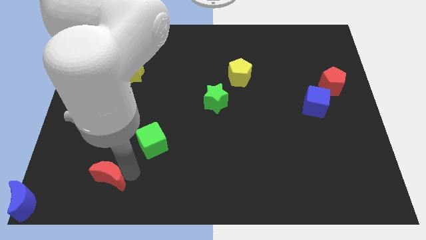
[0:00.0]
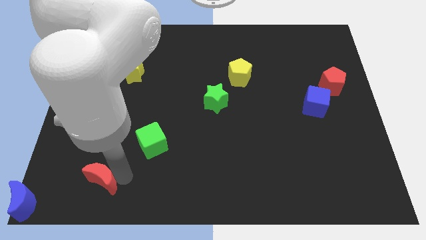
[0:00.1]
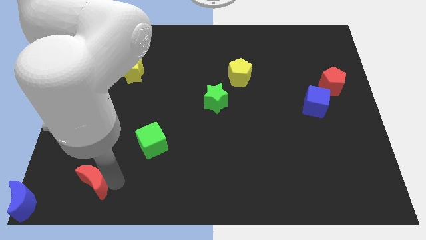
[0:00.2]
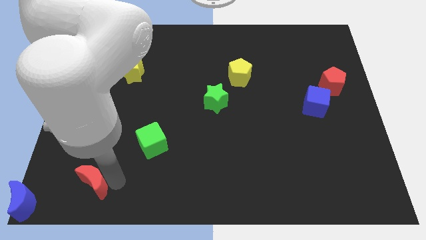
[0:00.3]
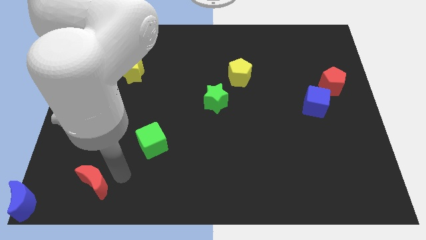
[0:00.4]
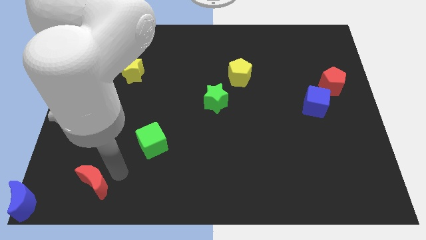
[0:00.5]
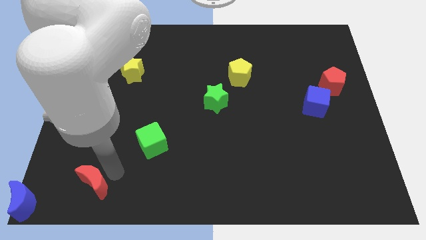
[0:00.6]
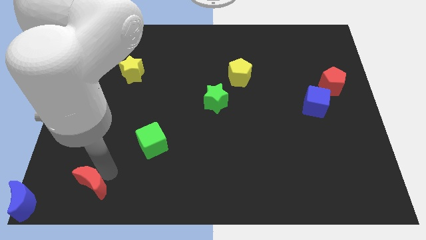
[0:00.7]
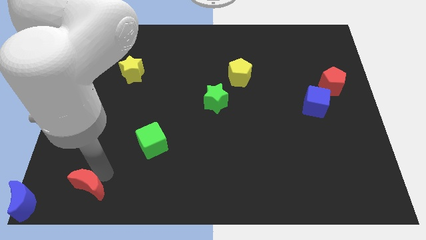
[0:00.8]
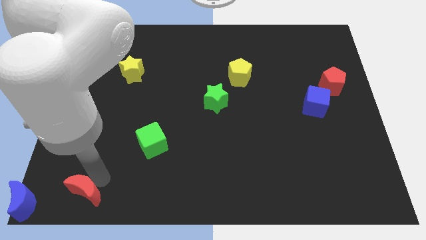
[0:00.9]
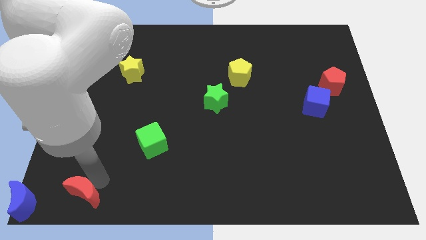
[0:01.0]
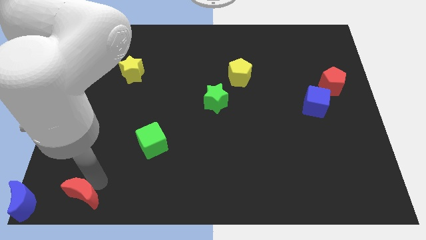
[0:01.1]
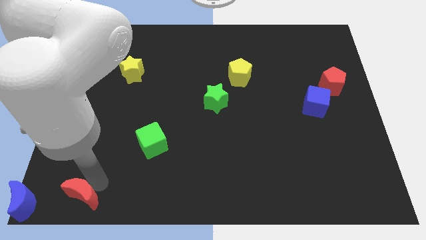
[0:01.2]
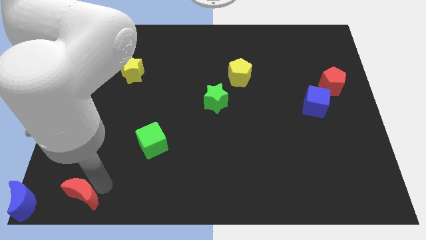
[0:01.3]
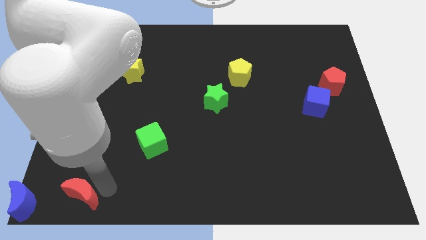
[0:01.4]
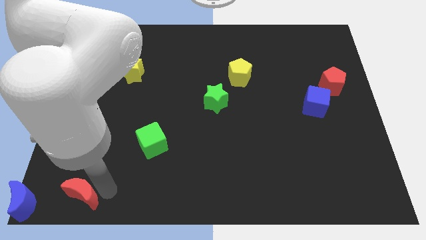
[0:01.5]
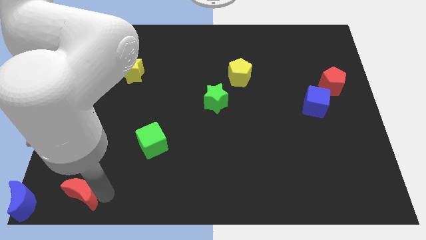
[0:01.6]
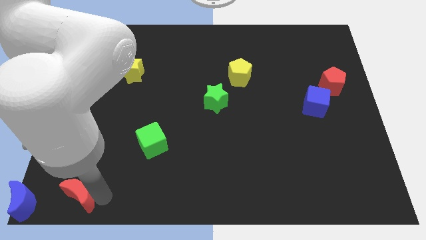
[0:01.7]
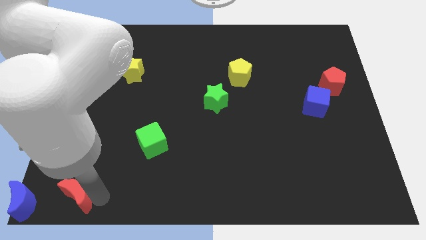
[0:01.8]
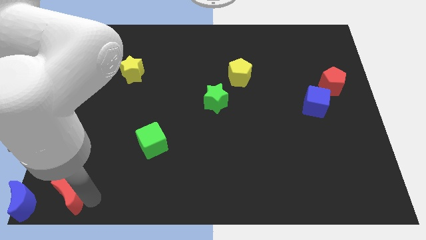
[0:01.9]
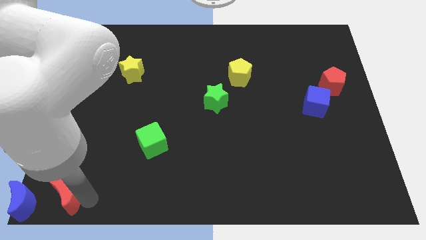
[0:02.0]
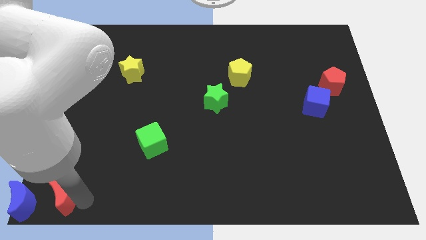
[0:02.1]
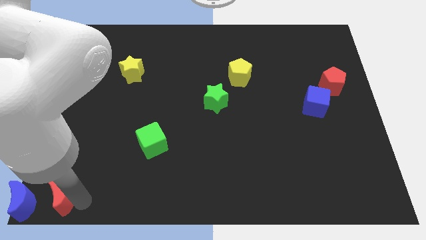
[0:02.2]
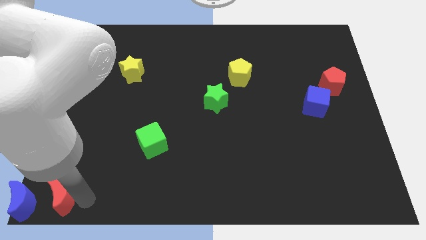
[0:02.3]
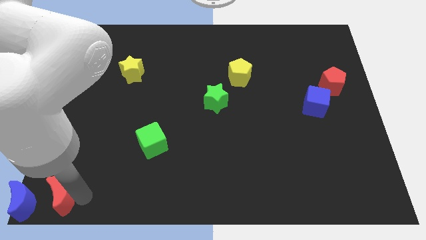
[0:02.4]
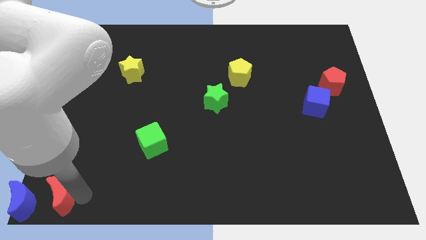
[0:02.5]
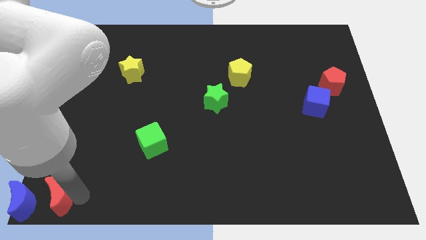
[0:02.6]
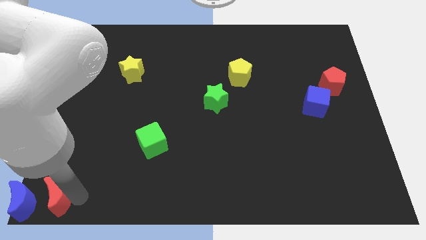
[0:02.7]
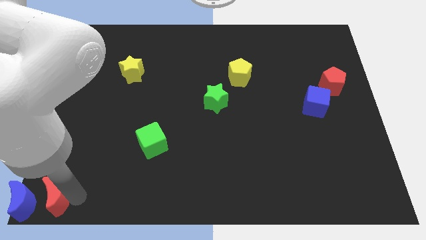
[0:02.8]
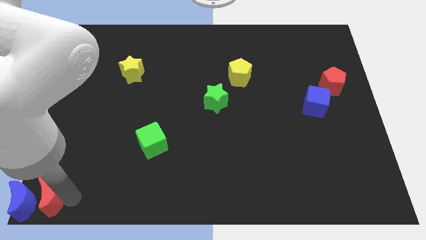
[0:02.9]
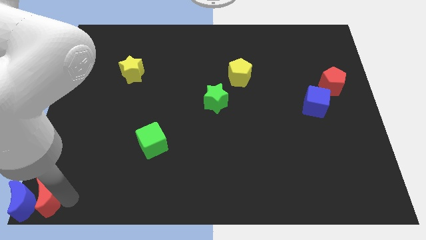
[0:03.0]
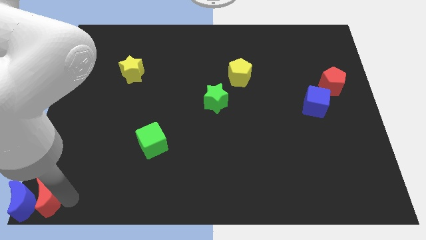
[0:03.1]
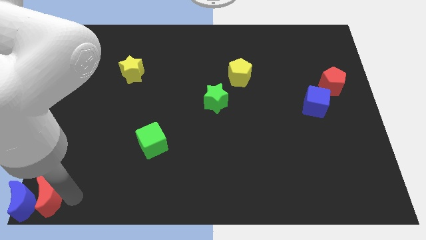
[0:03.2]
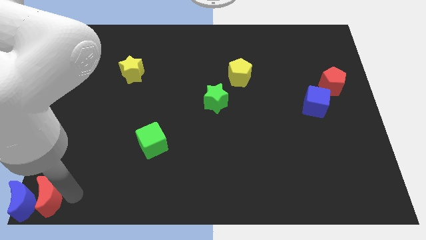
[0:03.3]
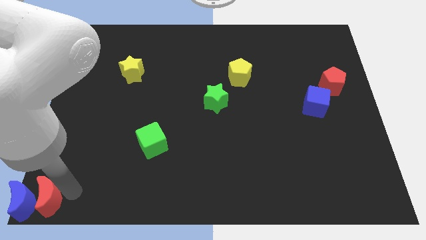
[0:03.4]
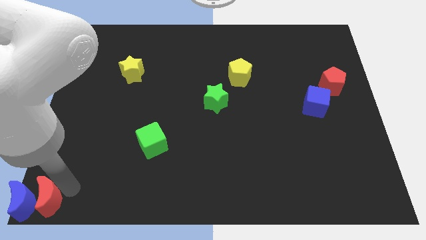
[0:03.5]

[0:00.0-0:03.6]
push the red moon to the bottom left of the board

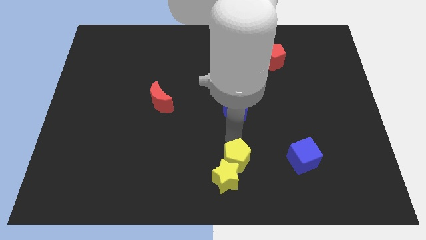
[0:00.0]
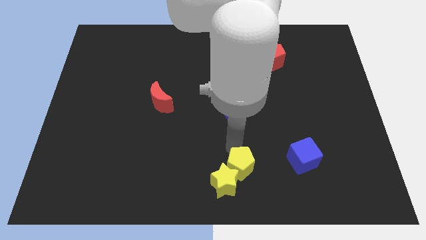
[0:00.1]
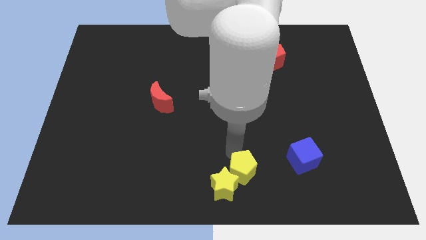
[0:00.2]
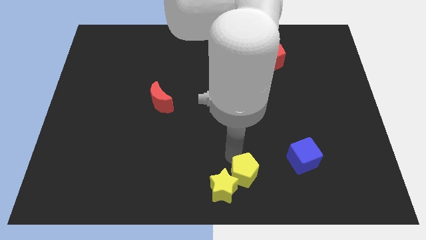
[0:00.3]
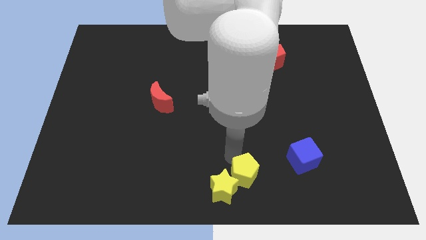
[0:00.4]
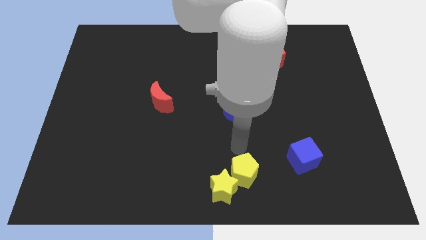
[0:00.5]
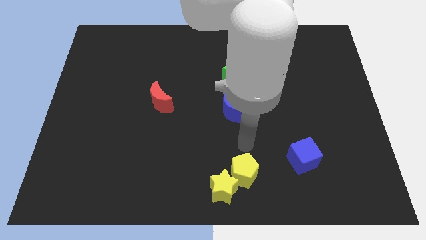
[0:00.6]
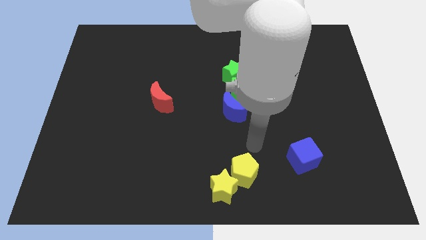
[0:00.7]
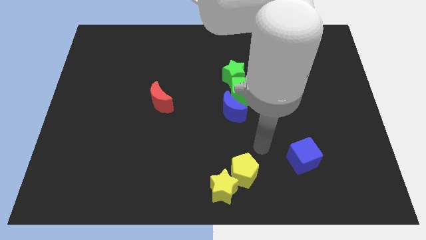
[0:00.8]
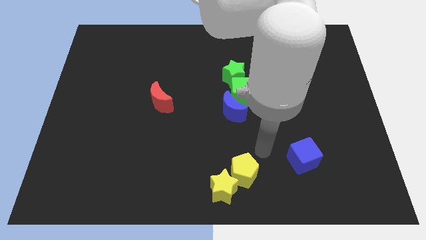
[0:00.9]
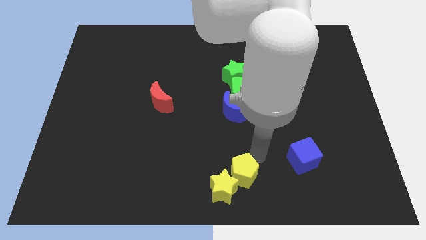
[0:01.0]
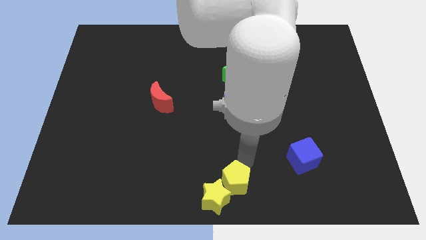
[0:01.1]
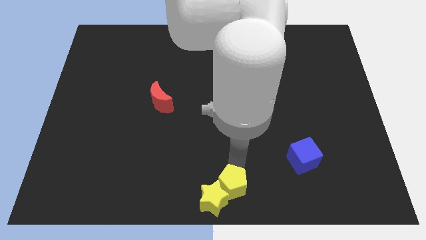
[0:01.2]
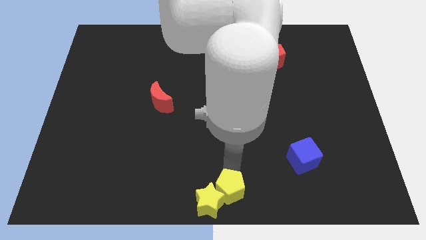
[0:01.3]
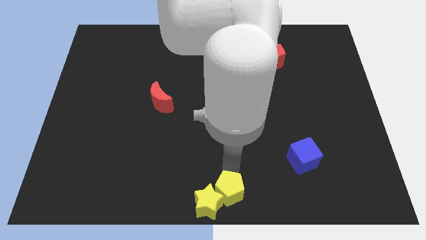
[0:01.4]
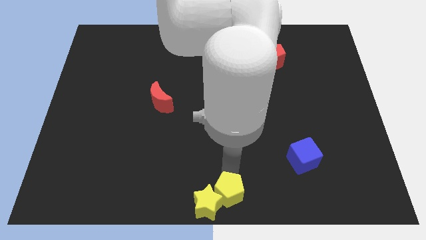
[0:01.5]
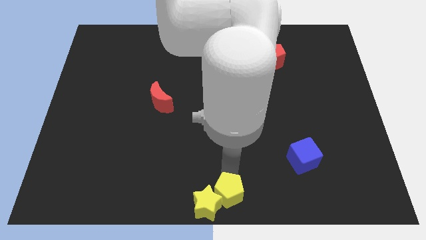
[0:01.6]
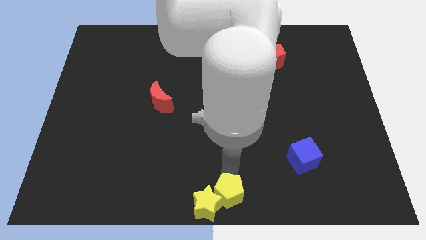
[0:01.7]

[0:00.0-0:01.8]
push the yellow pentagon into the yellow star

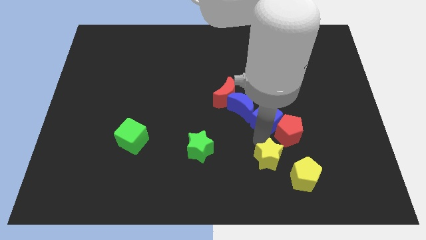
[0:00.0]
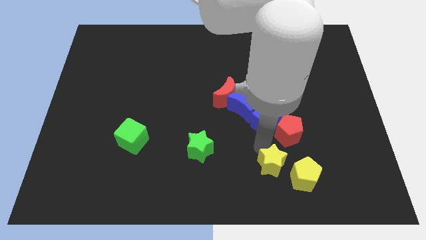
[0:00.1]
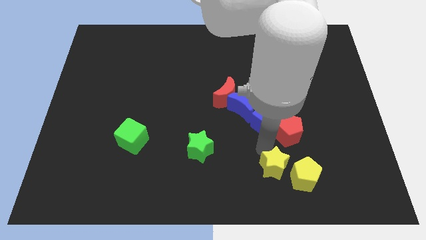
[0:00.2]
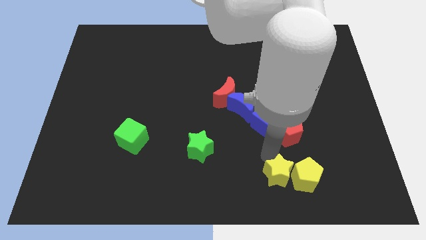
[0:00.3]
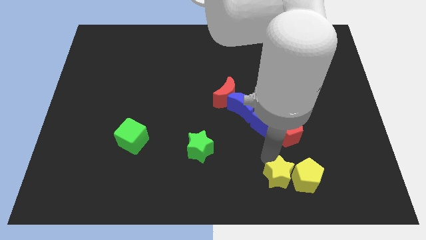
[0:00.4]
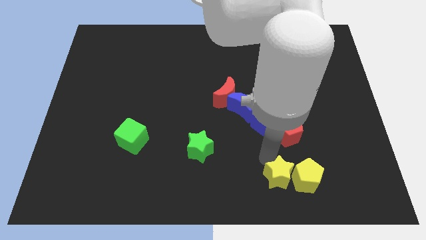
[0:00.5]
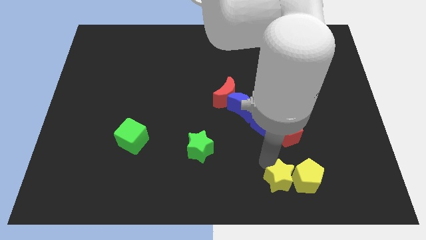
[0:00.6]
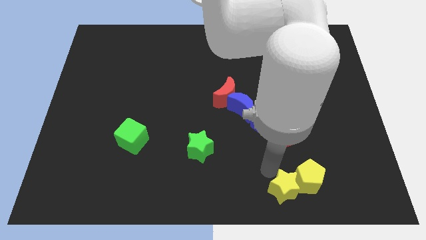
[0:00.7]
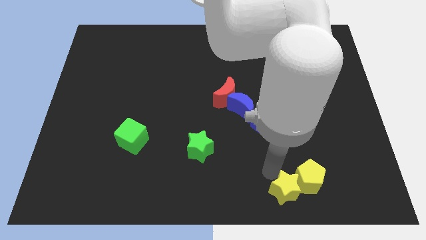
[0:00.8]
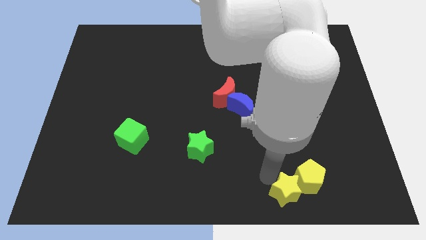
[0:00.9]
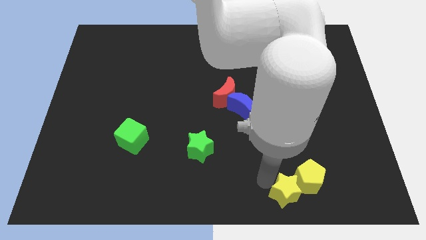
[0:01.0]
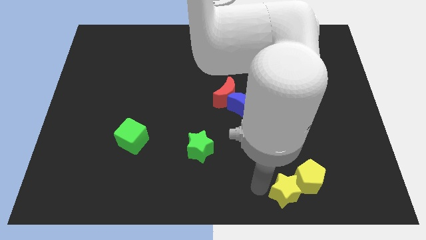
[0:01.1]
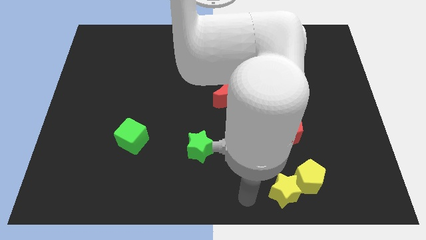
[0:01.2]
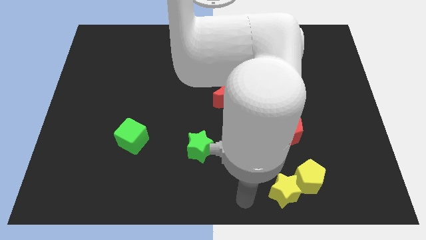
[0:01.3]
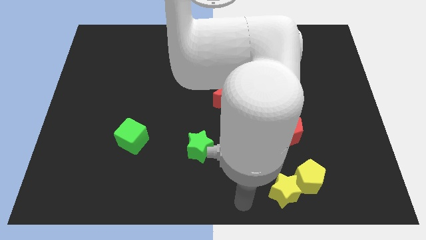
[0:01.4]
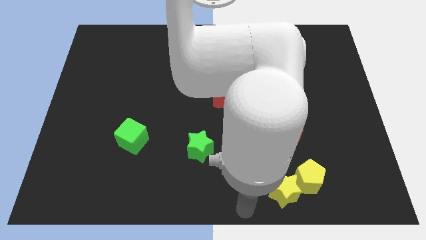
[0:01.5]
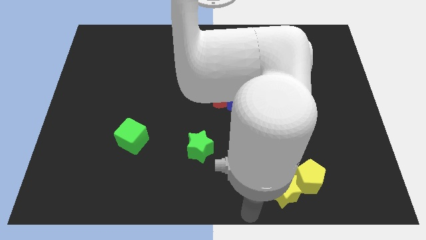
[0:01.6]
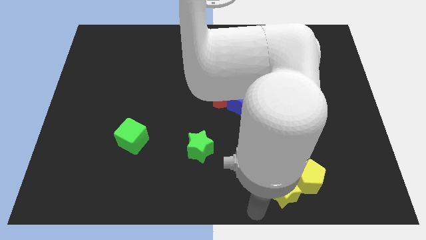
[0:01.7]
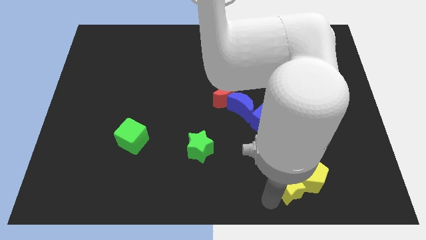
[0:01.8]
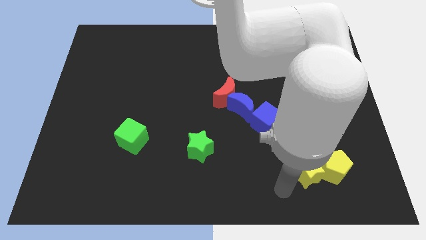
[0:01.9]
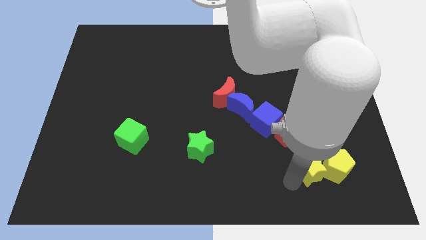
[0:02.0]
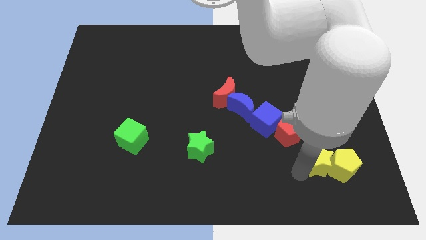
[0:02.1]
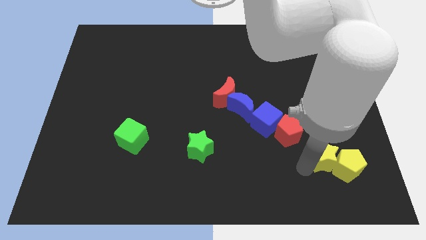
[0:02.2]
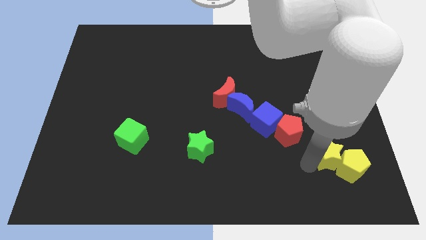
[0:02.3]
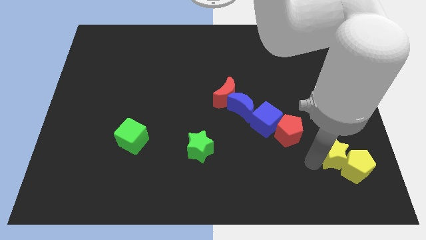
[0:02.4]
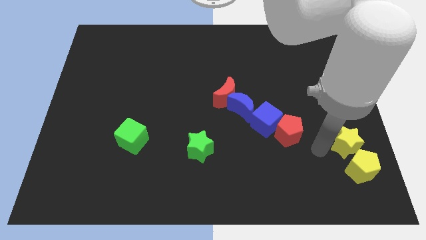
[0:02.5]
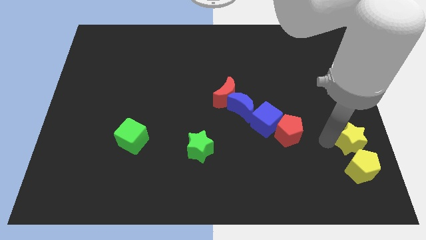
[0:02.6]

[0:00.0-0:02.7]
push the yellow star along with the yellow pentagon slightly to the bottom right of the board

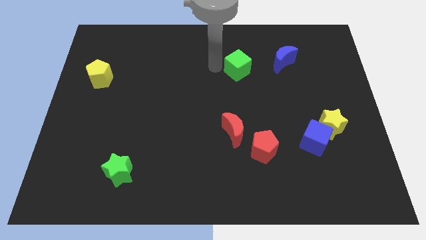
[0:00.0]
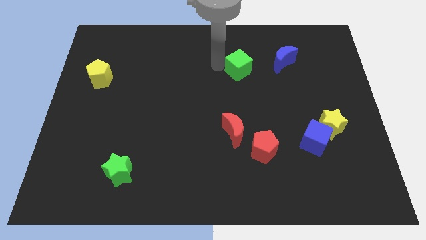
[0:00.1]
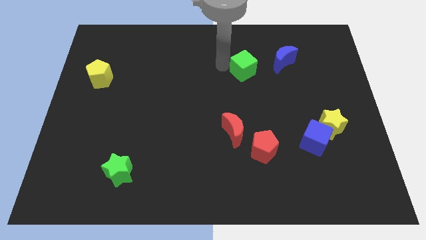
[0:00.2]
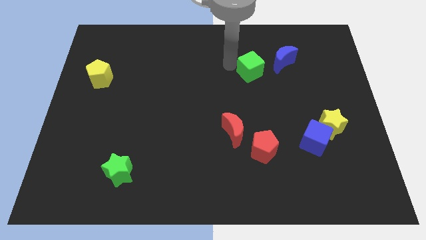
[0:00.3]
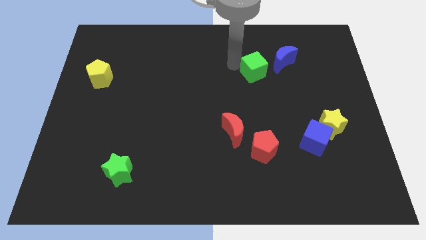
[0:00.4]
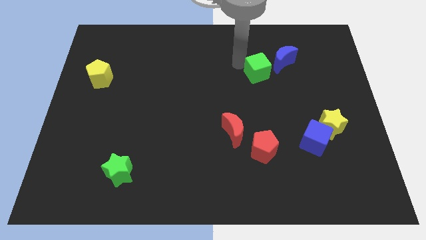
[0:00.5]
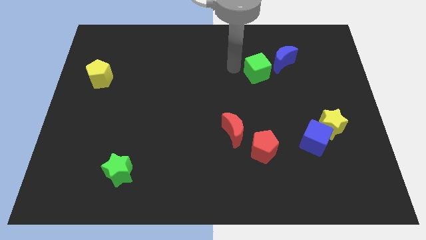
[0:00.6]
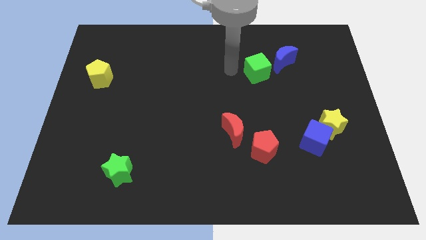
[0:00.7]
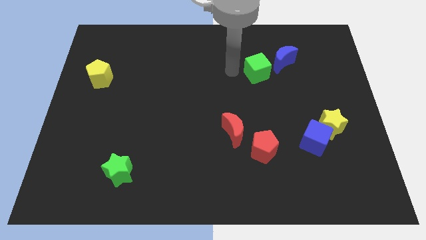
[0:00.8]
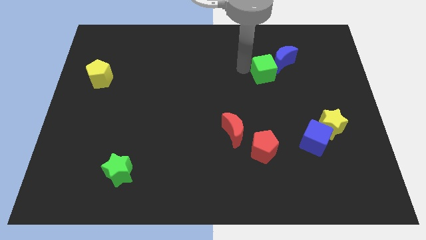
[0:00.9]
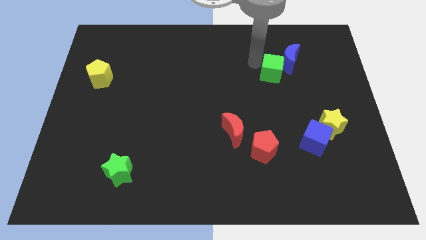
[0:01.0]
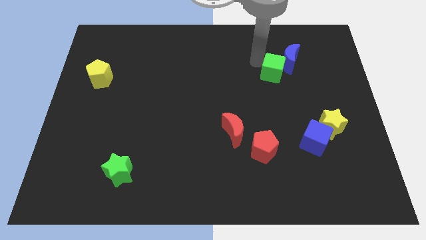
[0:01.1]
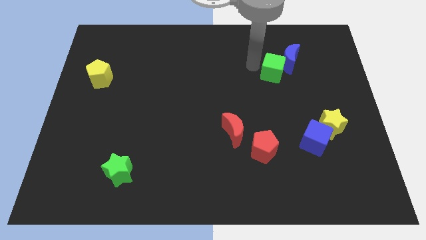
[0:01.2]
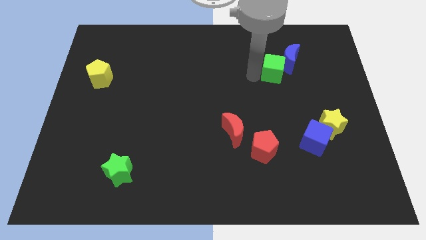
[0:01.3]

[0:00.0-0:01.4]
move green cube left below the blue moon
